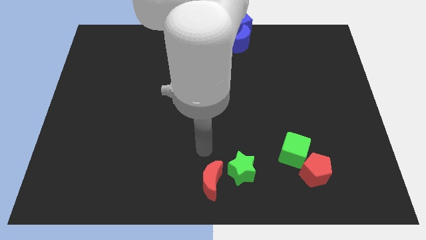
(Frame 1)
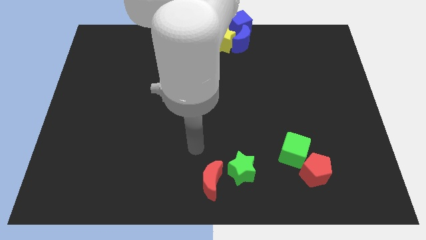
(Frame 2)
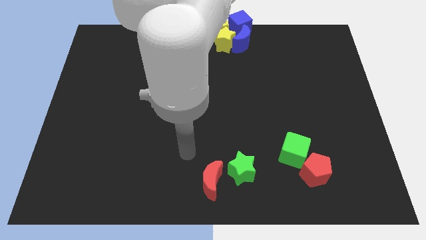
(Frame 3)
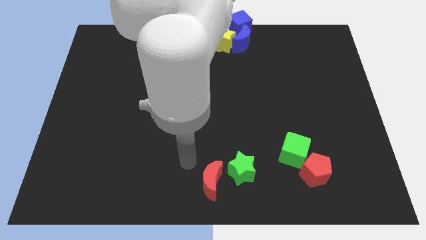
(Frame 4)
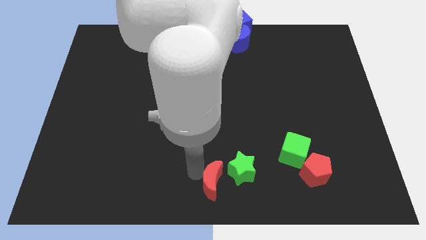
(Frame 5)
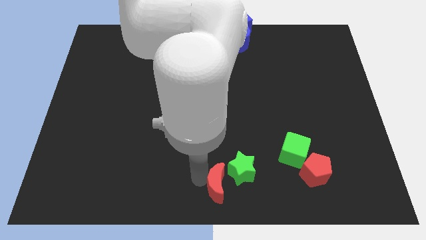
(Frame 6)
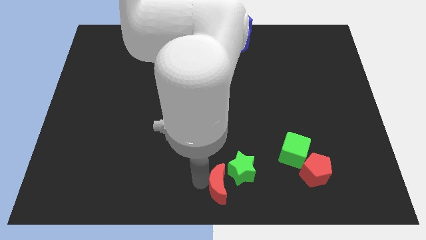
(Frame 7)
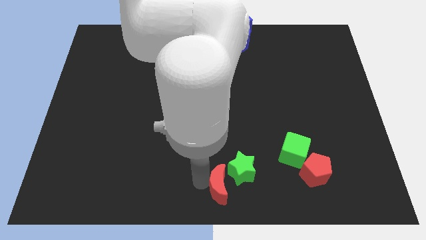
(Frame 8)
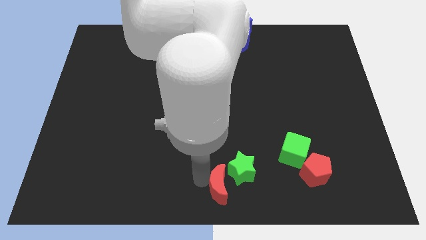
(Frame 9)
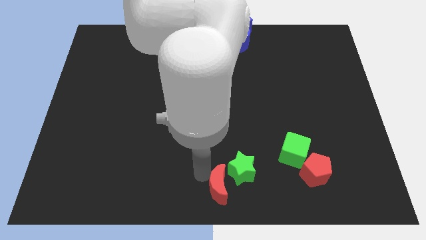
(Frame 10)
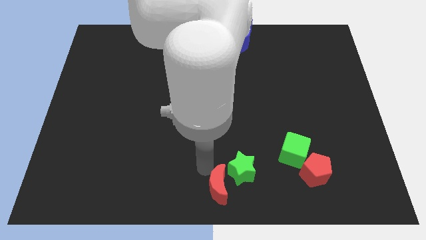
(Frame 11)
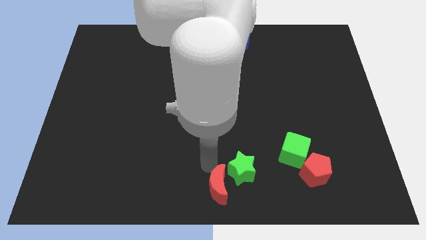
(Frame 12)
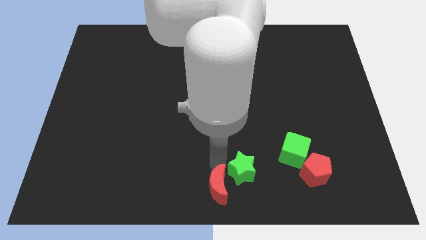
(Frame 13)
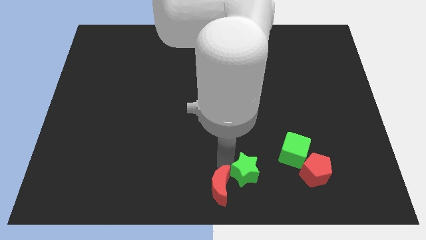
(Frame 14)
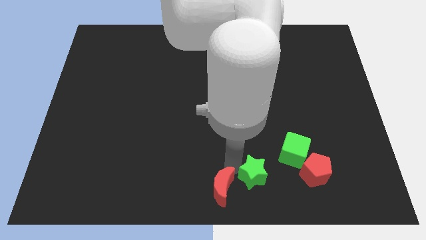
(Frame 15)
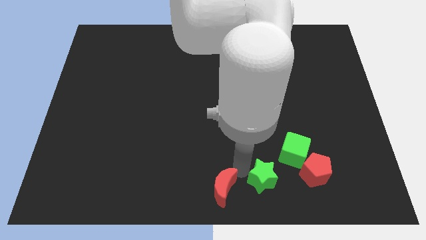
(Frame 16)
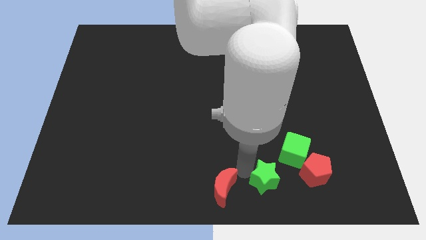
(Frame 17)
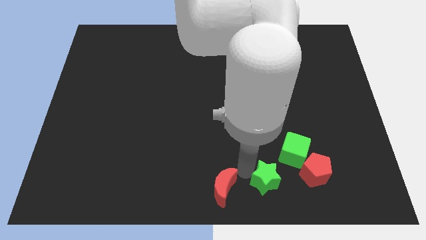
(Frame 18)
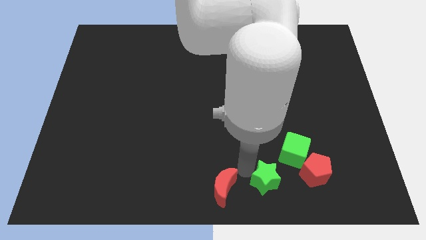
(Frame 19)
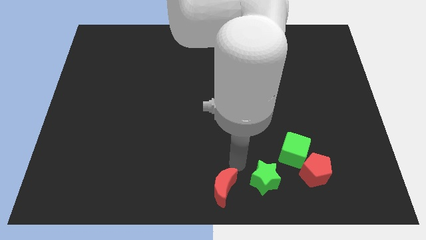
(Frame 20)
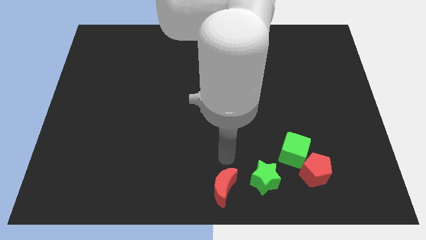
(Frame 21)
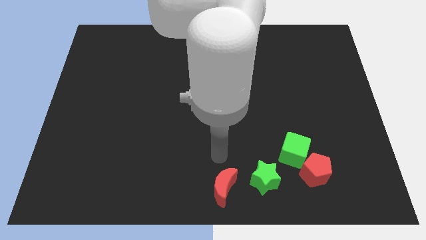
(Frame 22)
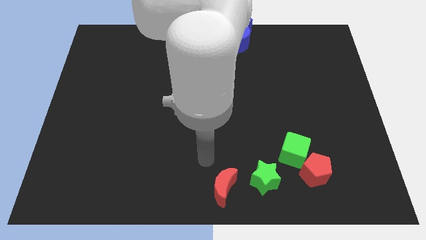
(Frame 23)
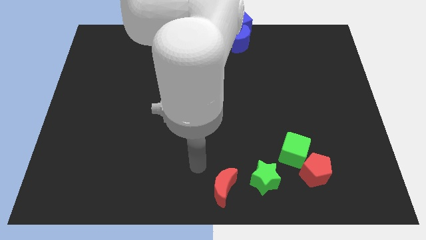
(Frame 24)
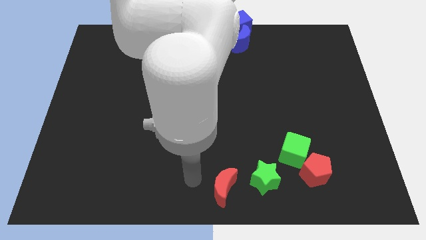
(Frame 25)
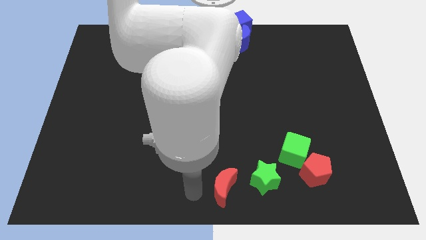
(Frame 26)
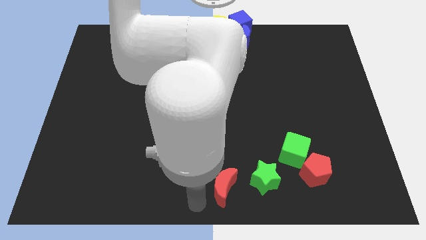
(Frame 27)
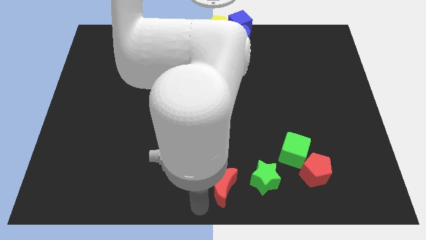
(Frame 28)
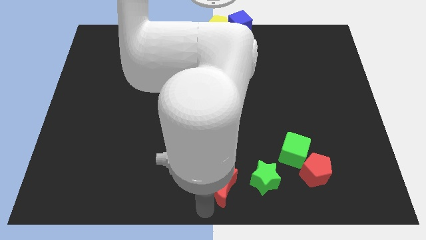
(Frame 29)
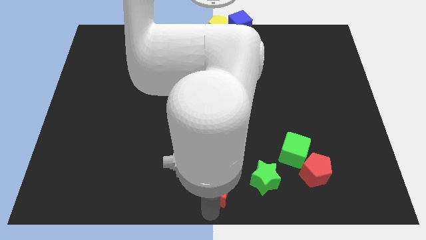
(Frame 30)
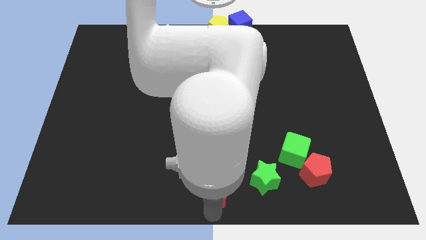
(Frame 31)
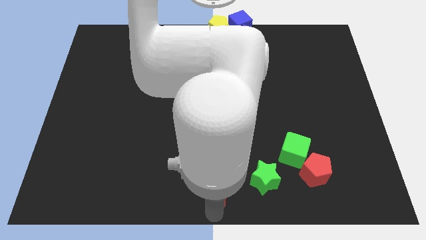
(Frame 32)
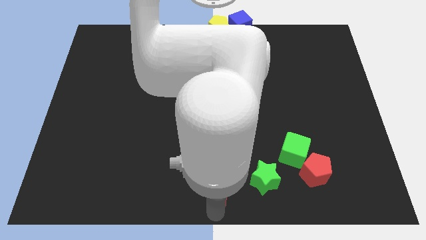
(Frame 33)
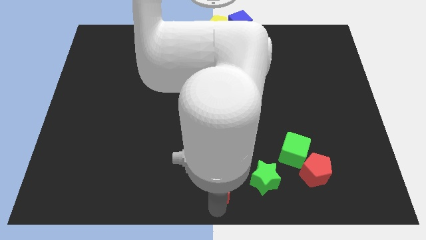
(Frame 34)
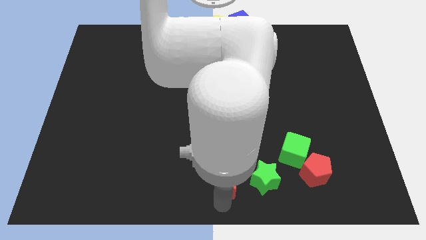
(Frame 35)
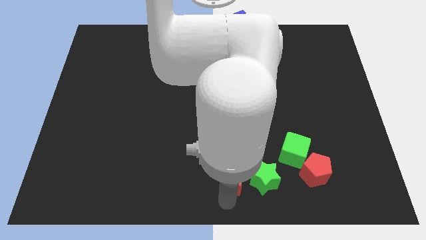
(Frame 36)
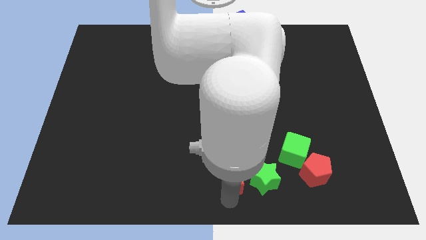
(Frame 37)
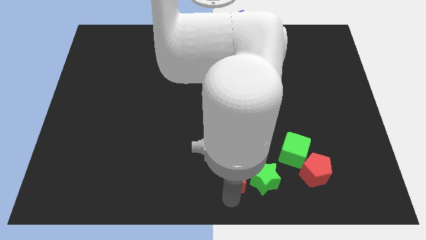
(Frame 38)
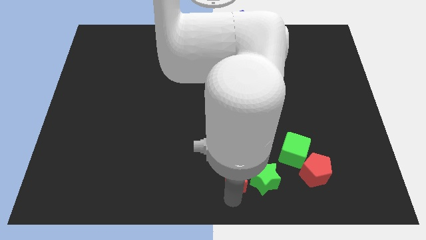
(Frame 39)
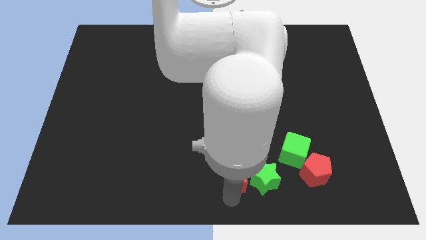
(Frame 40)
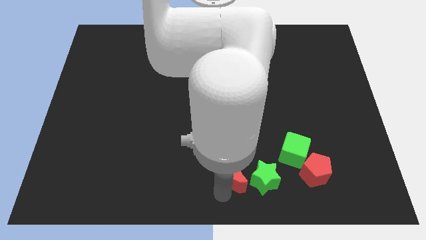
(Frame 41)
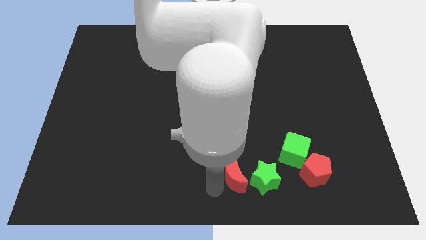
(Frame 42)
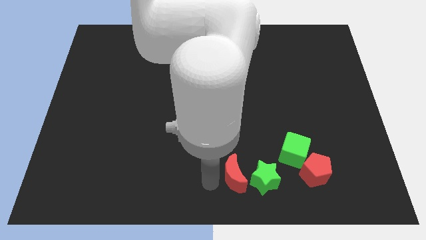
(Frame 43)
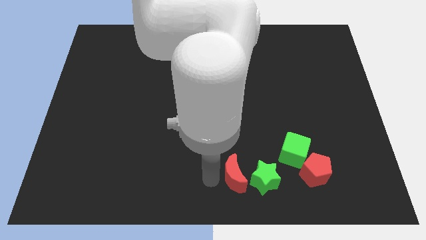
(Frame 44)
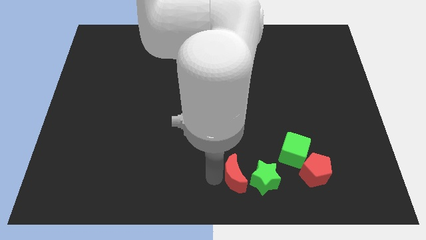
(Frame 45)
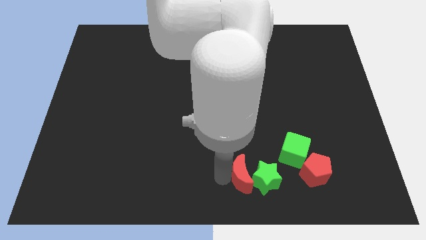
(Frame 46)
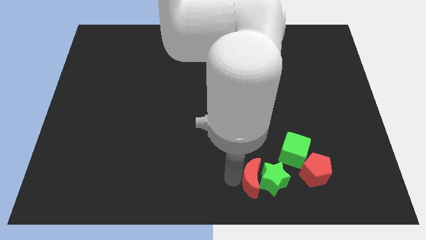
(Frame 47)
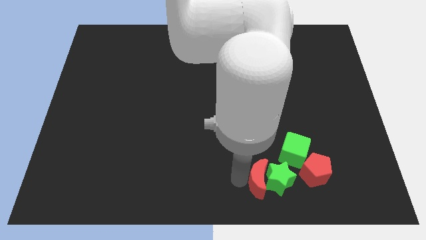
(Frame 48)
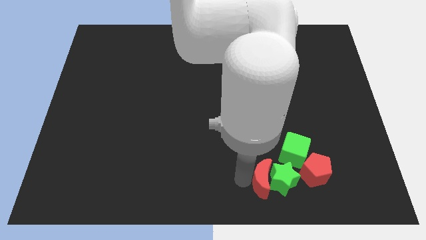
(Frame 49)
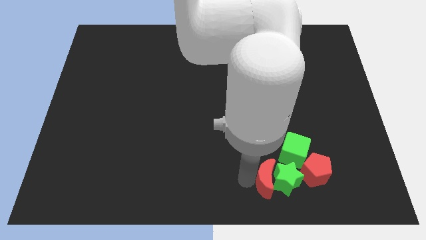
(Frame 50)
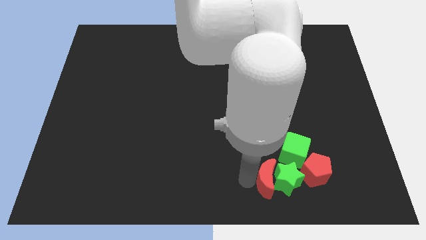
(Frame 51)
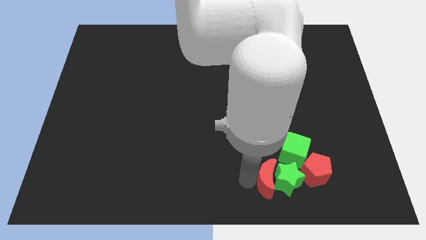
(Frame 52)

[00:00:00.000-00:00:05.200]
move the green star and the red crescent to the left of the red pentagon

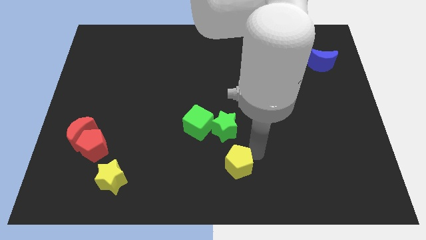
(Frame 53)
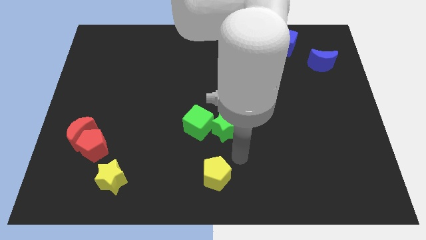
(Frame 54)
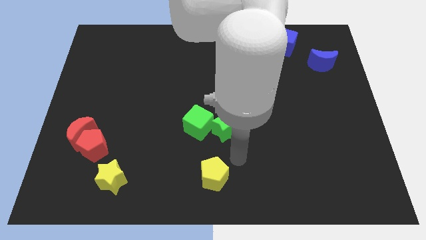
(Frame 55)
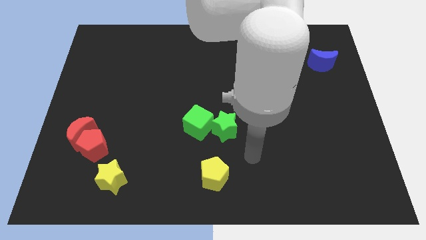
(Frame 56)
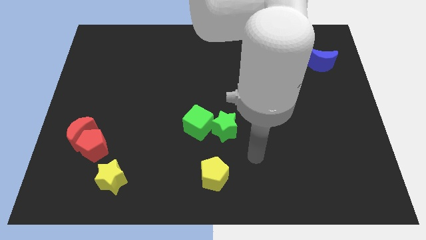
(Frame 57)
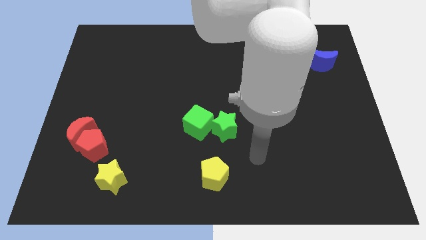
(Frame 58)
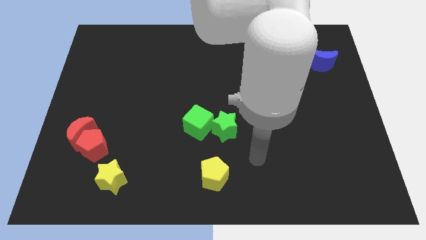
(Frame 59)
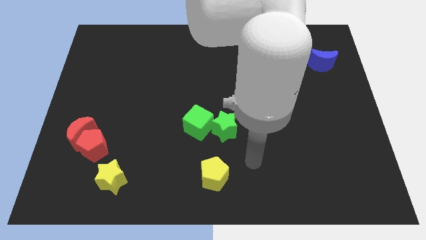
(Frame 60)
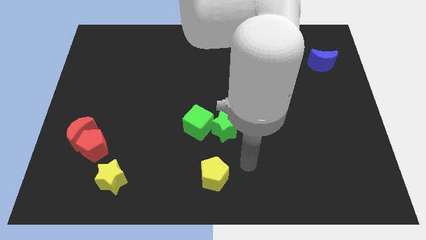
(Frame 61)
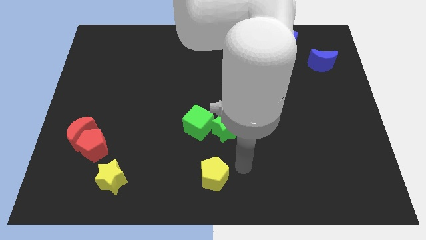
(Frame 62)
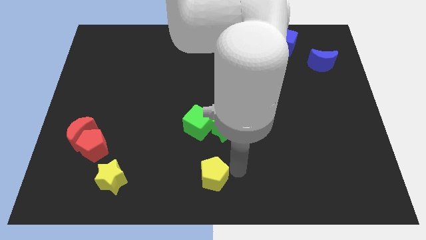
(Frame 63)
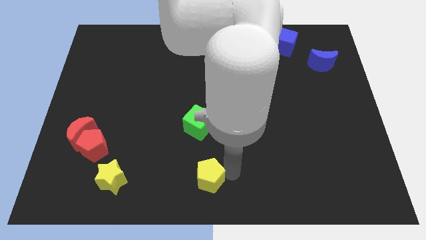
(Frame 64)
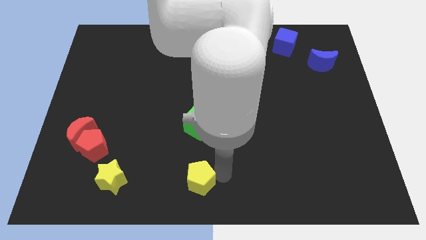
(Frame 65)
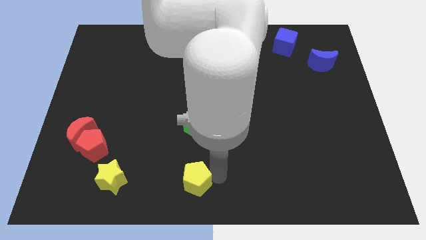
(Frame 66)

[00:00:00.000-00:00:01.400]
place the yellow pentagon under the green cube

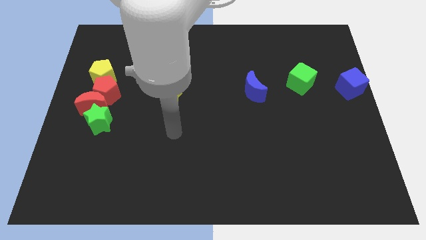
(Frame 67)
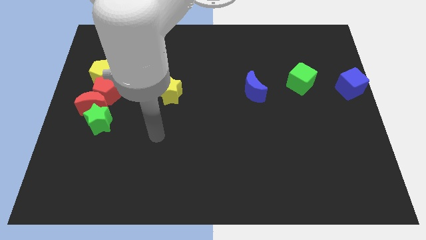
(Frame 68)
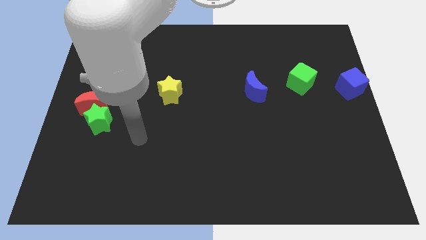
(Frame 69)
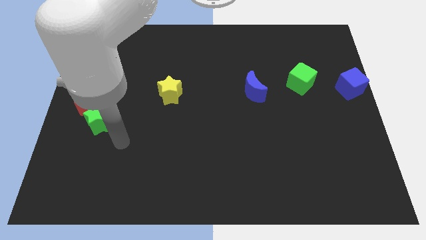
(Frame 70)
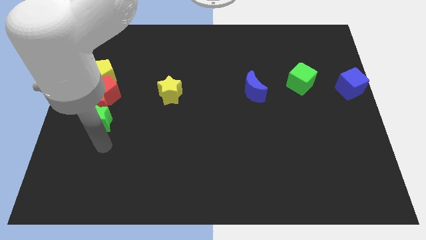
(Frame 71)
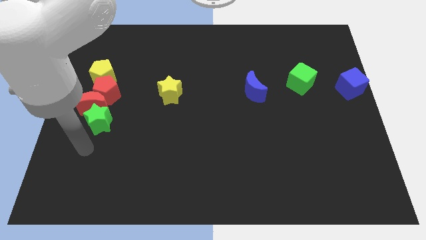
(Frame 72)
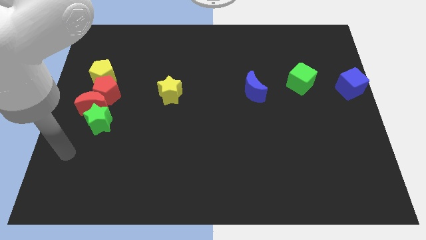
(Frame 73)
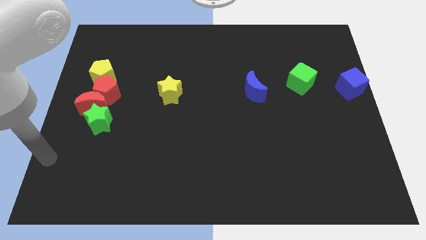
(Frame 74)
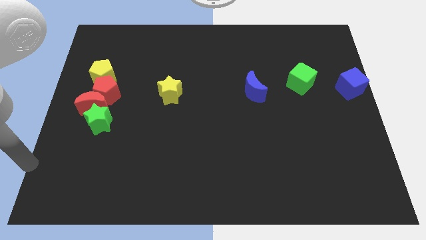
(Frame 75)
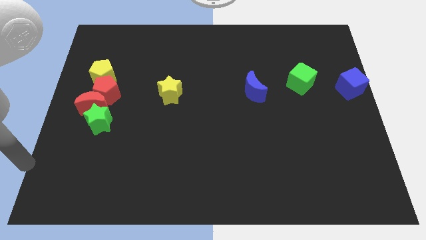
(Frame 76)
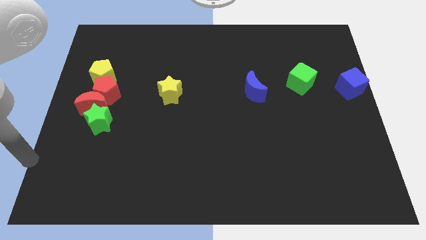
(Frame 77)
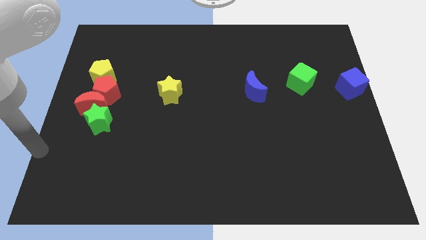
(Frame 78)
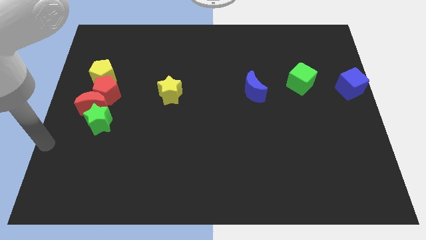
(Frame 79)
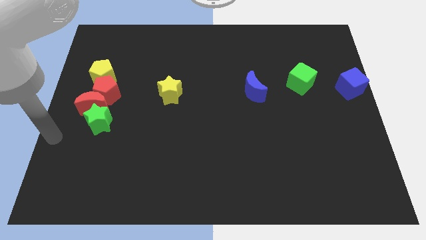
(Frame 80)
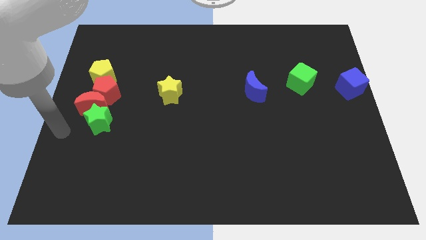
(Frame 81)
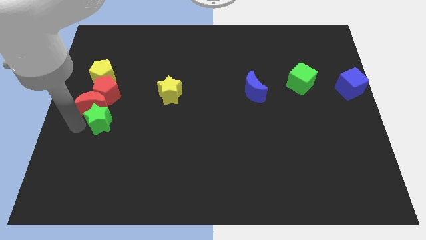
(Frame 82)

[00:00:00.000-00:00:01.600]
move arm to the left of green star

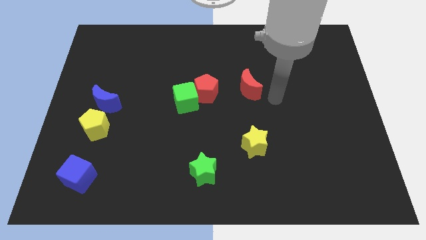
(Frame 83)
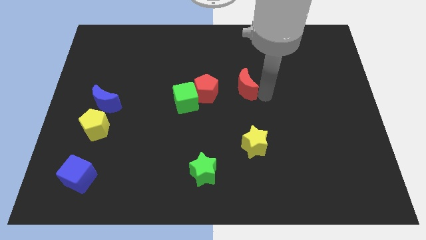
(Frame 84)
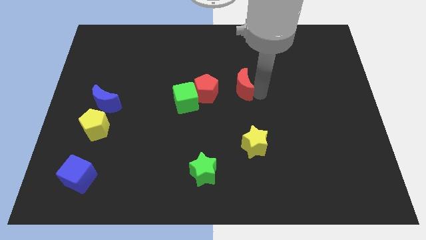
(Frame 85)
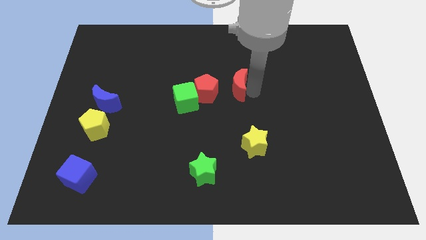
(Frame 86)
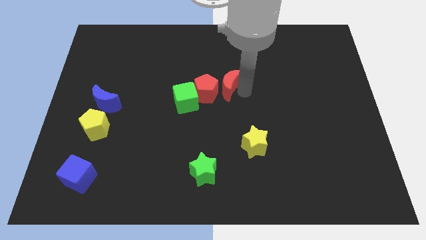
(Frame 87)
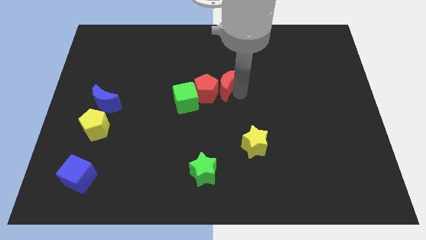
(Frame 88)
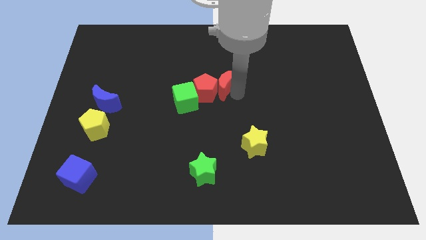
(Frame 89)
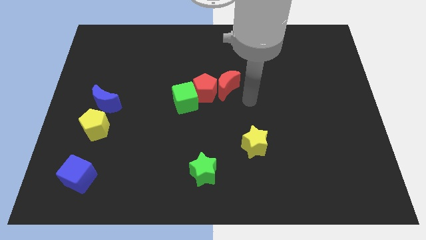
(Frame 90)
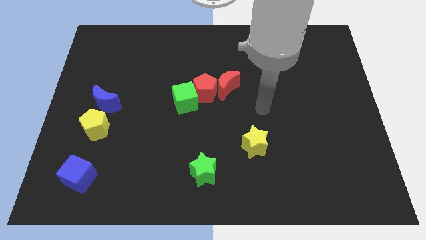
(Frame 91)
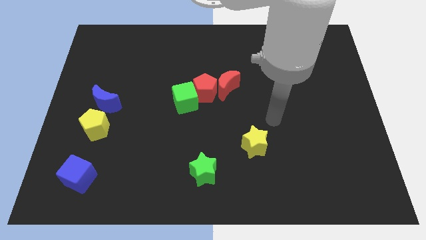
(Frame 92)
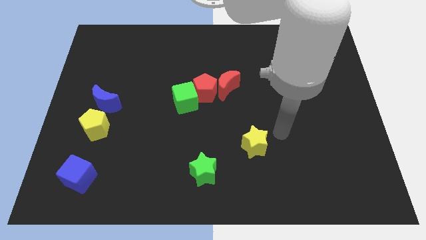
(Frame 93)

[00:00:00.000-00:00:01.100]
push the red crescent to the right of the red pentagon
